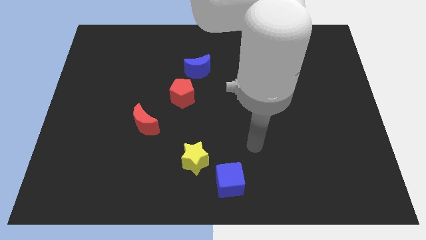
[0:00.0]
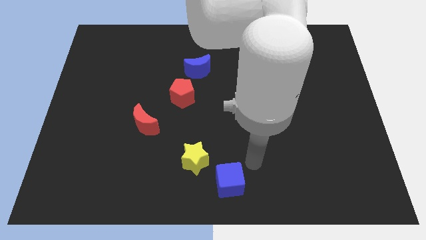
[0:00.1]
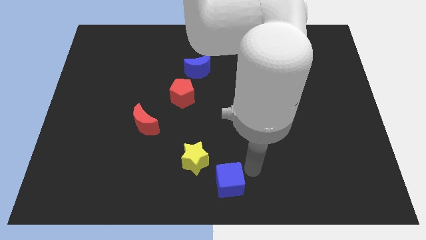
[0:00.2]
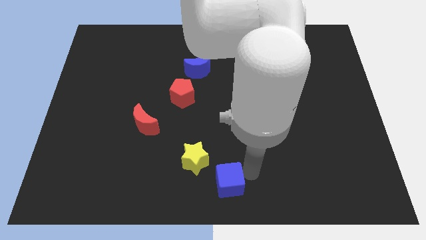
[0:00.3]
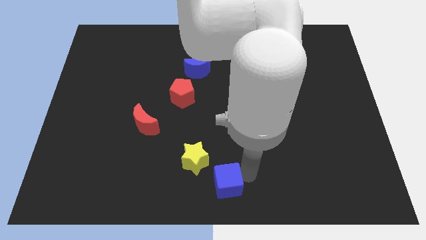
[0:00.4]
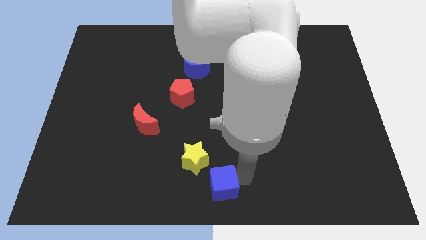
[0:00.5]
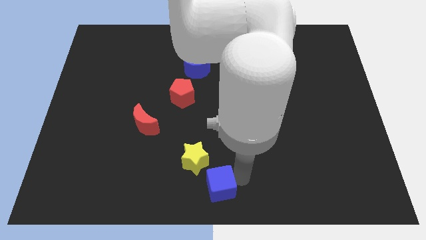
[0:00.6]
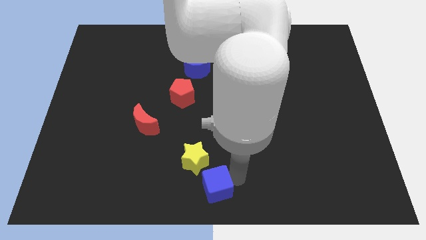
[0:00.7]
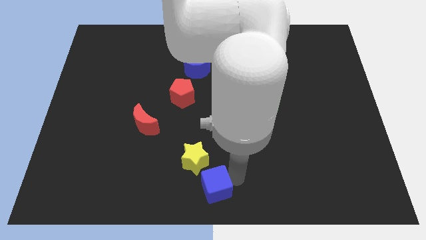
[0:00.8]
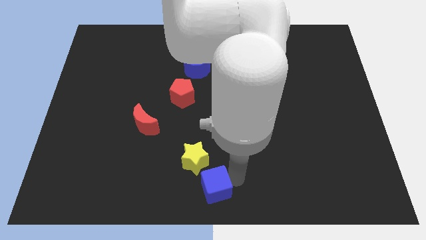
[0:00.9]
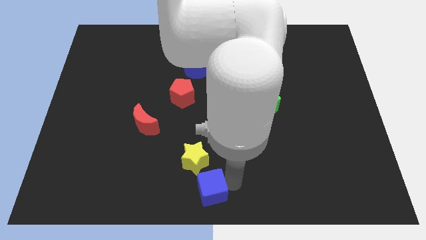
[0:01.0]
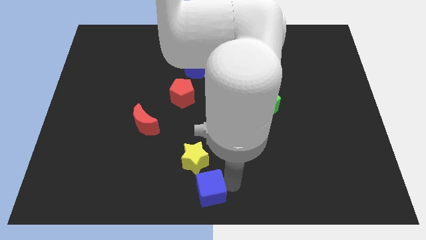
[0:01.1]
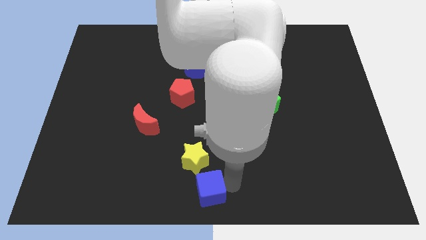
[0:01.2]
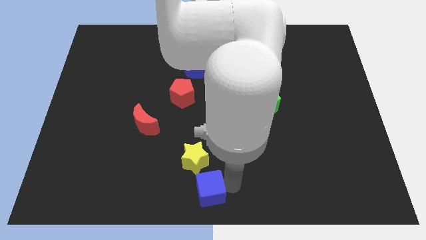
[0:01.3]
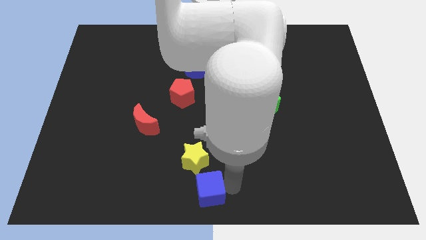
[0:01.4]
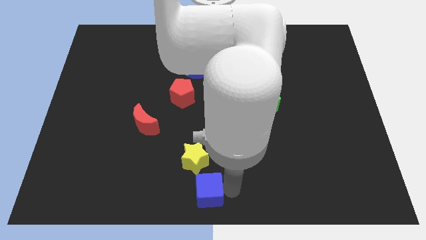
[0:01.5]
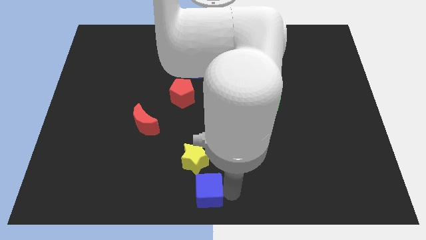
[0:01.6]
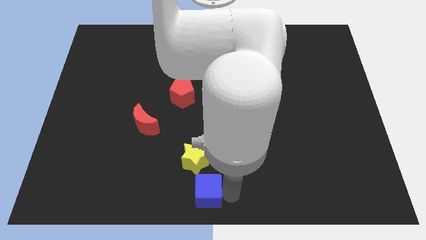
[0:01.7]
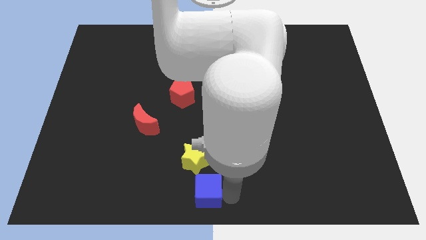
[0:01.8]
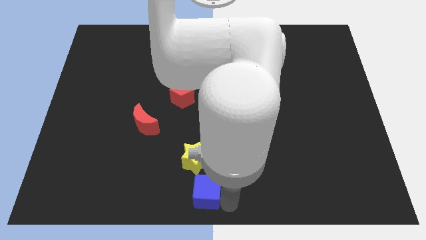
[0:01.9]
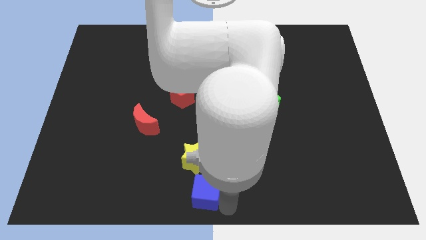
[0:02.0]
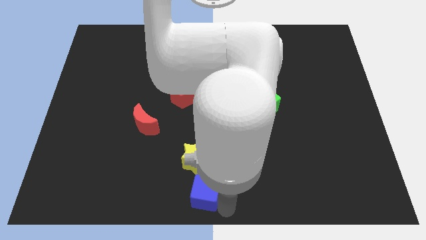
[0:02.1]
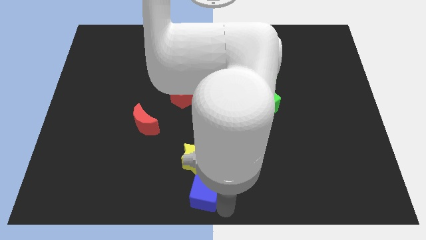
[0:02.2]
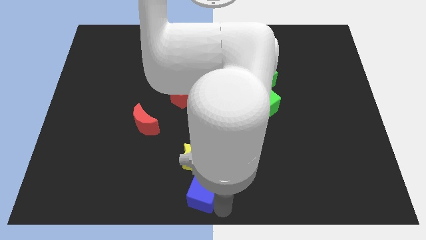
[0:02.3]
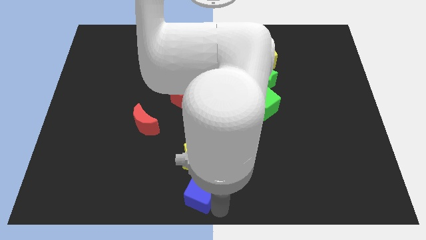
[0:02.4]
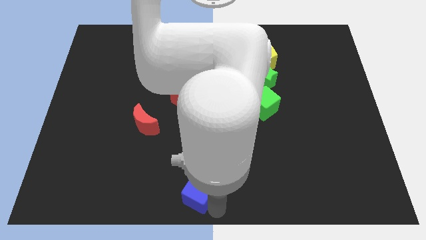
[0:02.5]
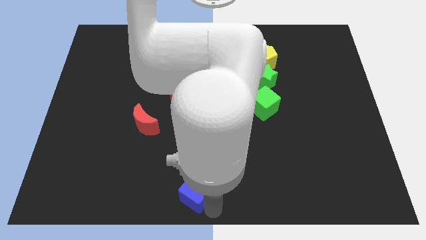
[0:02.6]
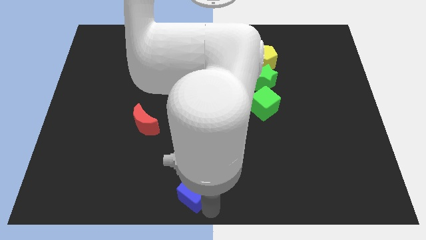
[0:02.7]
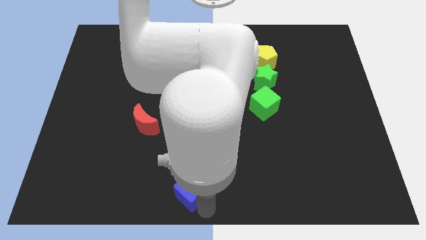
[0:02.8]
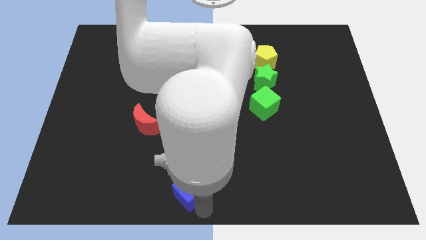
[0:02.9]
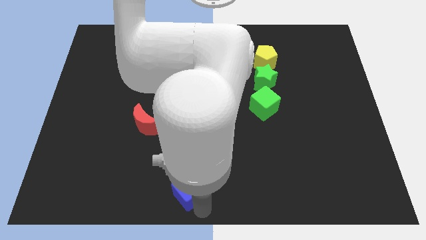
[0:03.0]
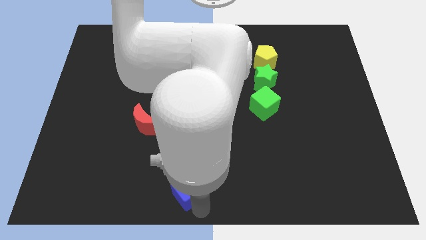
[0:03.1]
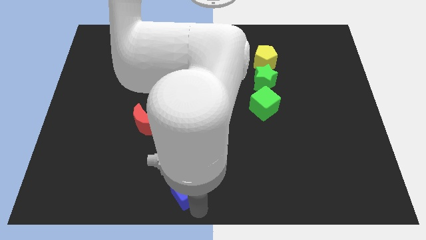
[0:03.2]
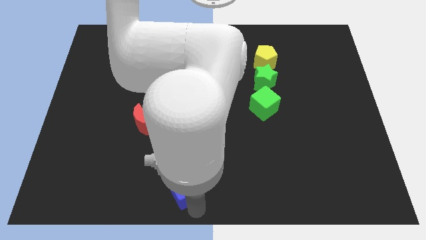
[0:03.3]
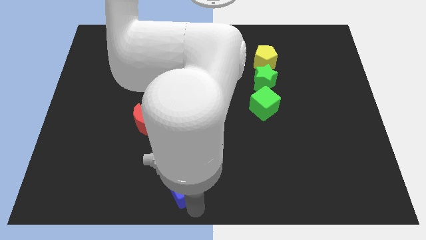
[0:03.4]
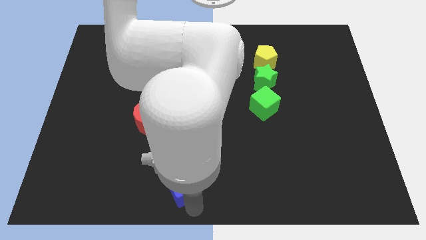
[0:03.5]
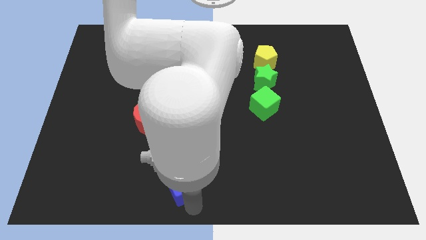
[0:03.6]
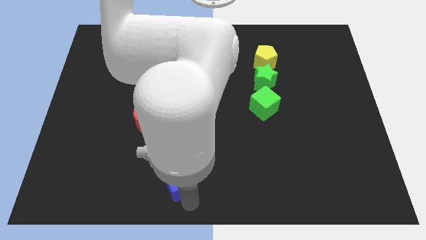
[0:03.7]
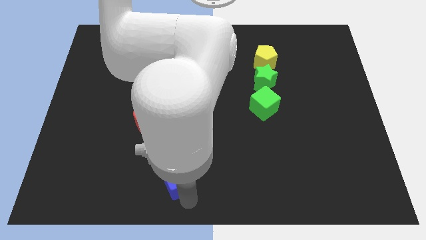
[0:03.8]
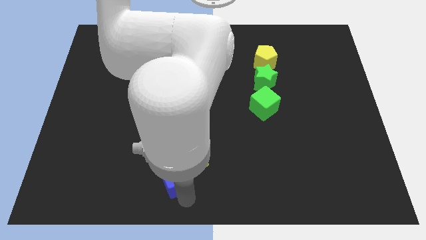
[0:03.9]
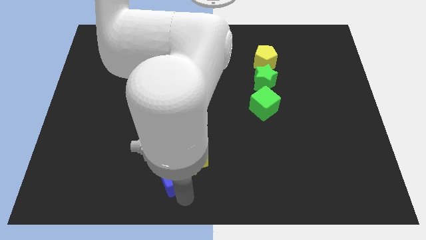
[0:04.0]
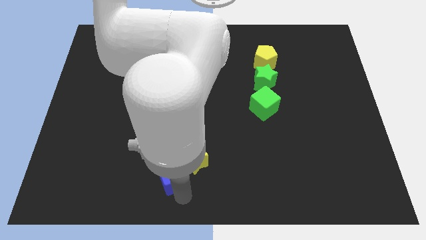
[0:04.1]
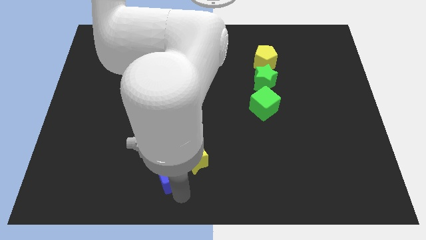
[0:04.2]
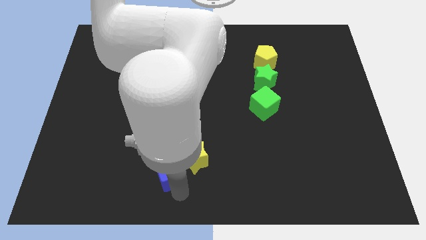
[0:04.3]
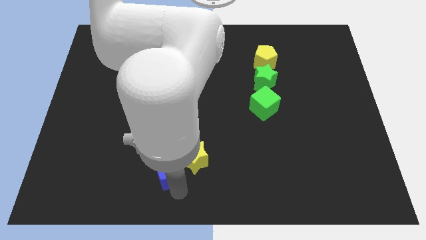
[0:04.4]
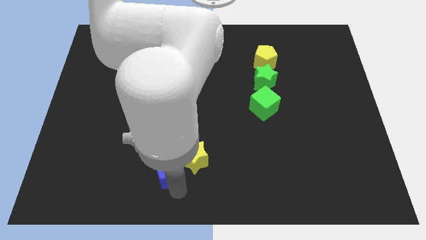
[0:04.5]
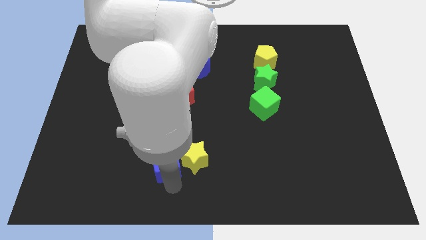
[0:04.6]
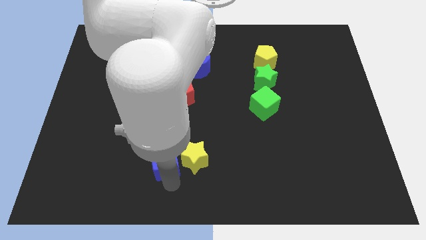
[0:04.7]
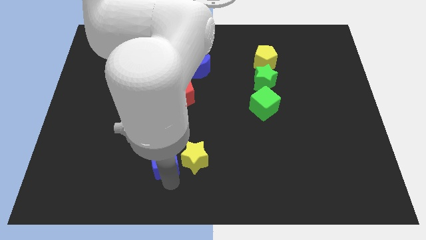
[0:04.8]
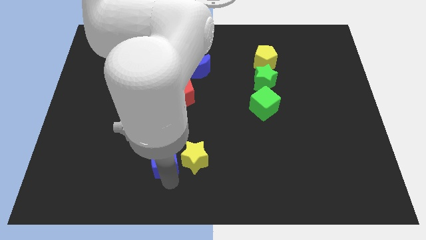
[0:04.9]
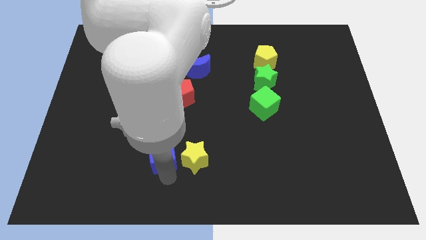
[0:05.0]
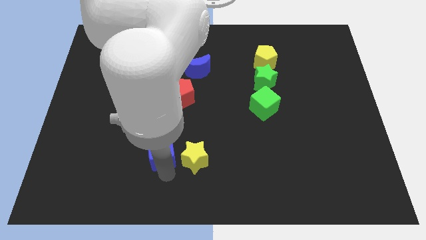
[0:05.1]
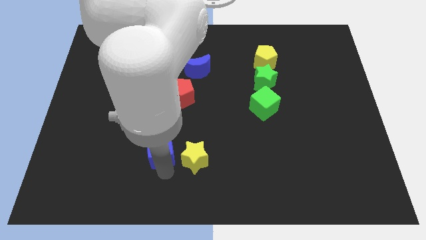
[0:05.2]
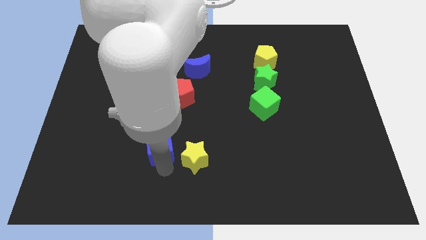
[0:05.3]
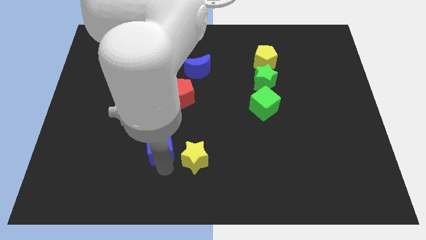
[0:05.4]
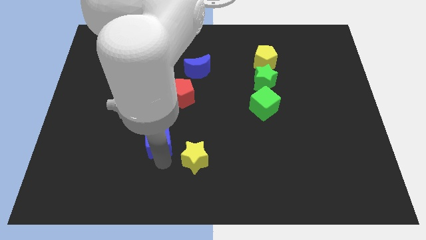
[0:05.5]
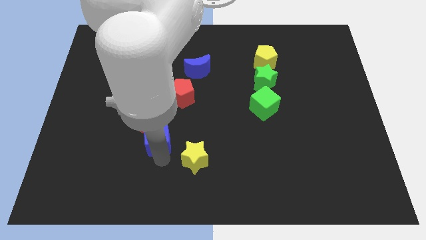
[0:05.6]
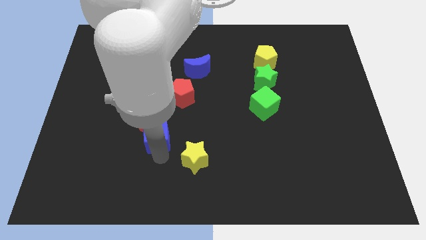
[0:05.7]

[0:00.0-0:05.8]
move the blue cube towards the red moon

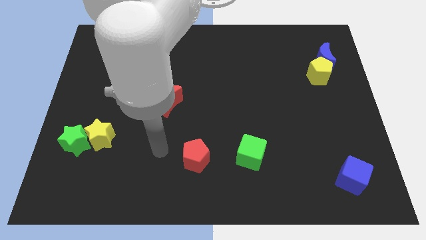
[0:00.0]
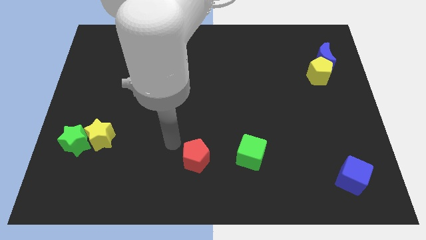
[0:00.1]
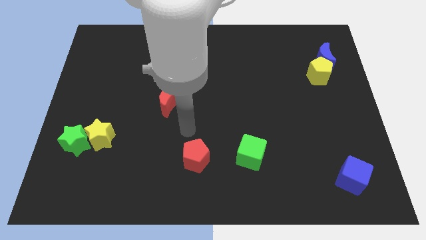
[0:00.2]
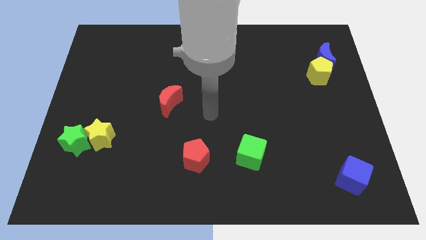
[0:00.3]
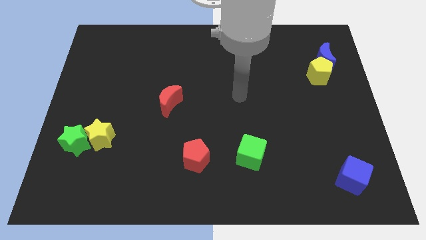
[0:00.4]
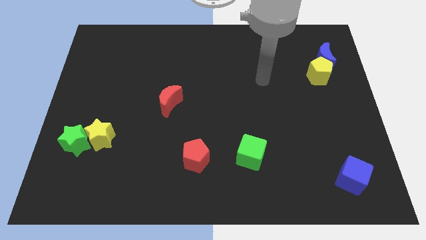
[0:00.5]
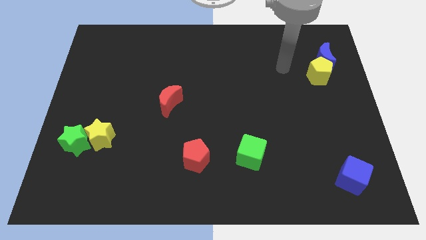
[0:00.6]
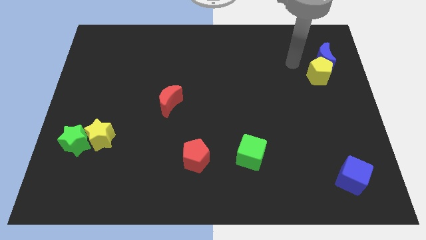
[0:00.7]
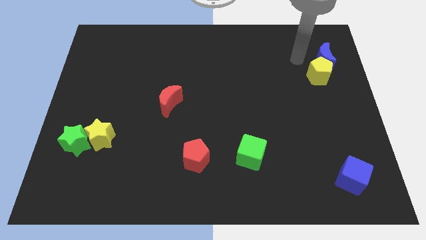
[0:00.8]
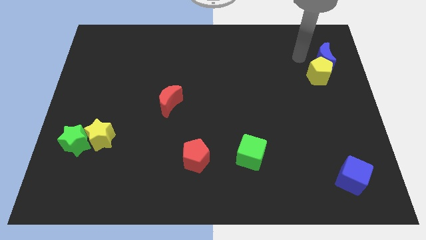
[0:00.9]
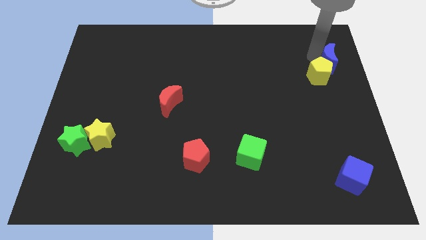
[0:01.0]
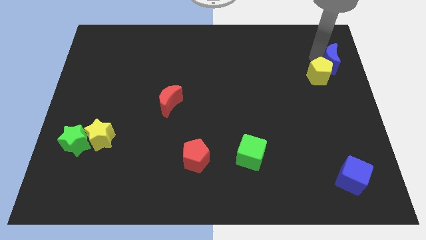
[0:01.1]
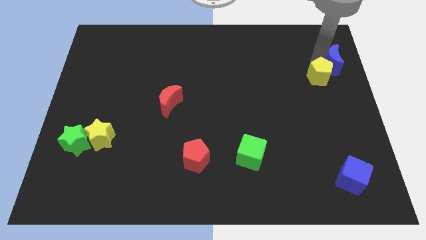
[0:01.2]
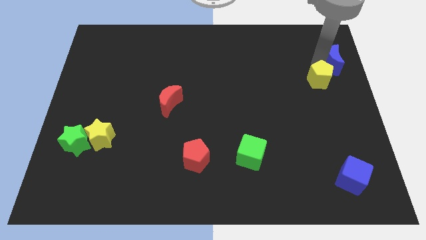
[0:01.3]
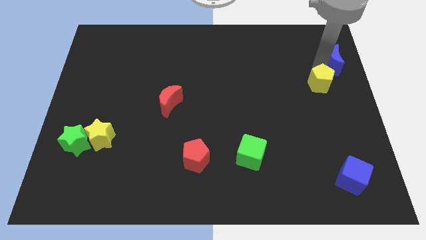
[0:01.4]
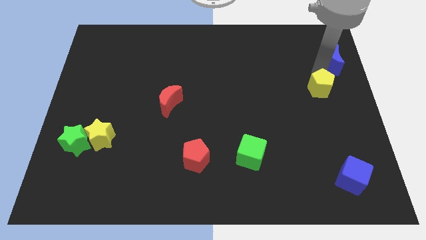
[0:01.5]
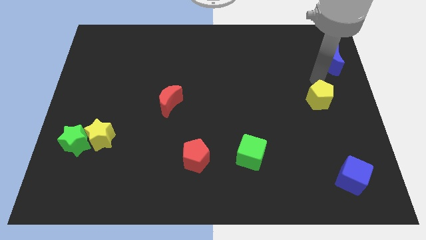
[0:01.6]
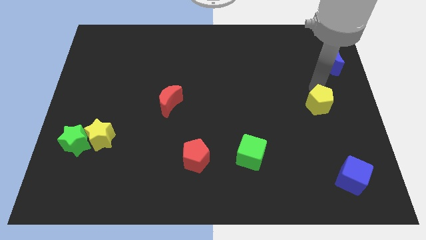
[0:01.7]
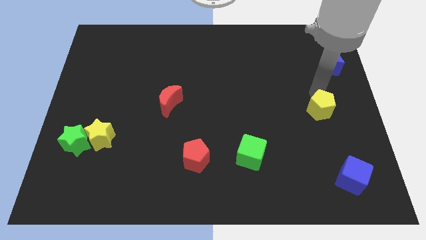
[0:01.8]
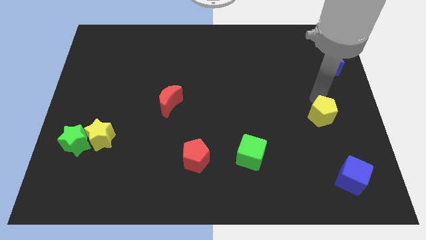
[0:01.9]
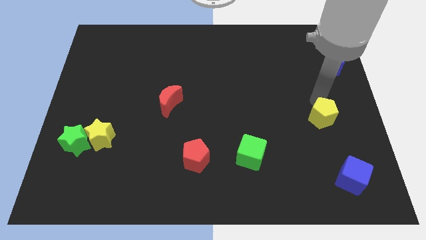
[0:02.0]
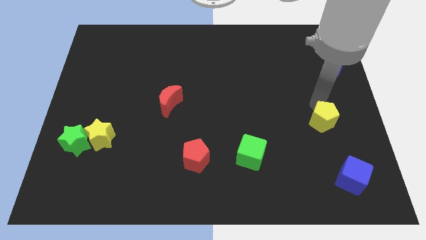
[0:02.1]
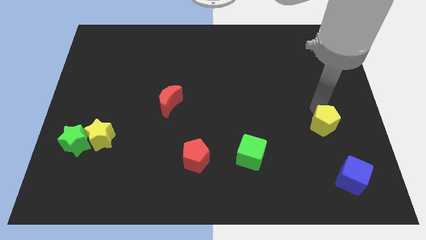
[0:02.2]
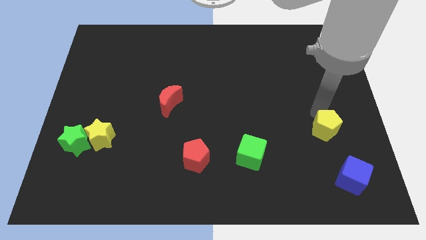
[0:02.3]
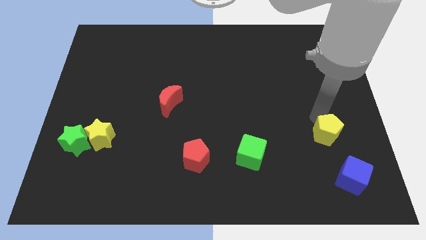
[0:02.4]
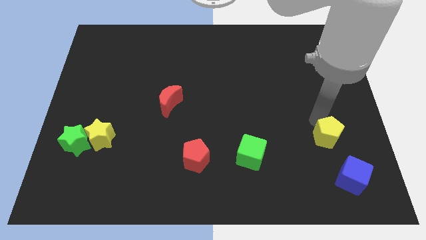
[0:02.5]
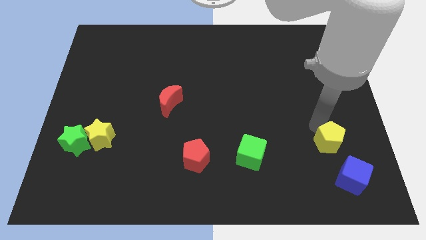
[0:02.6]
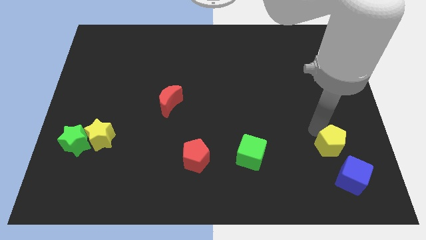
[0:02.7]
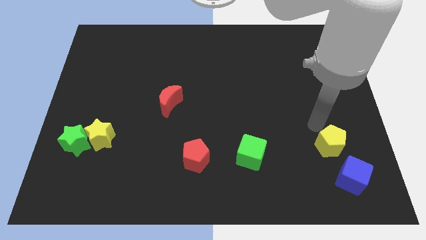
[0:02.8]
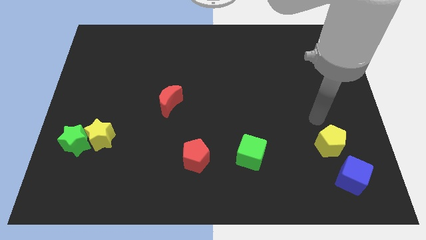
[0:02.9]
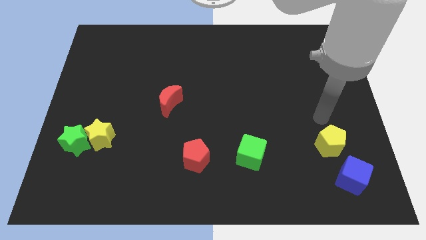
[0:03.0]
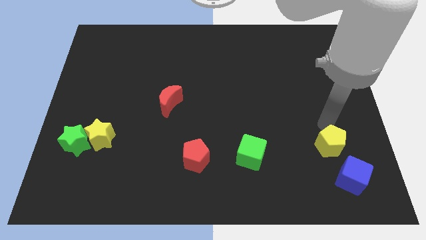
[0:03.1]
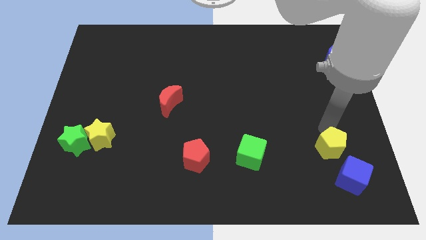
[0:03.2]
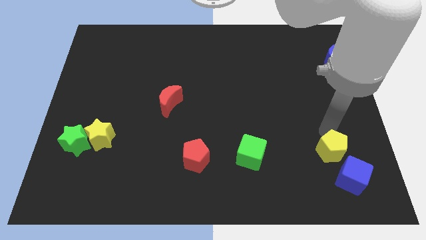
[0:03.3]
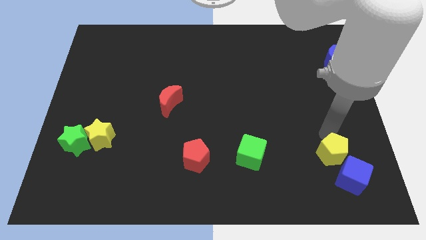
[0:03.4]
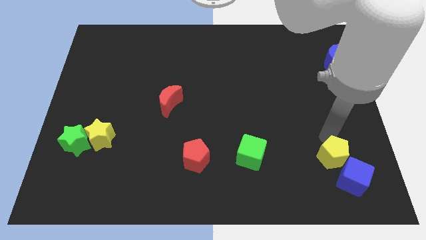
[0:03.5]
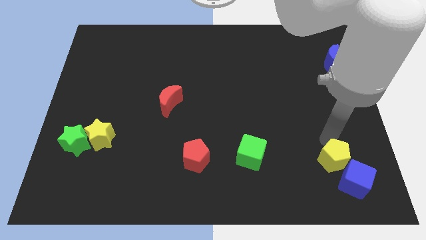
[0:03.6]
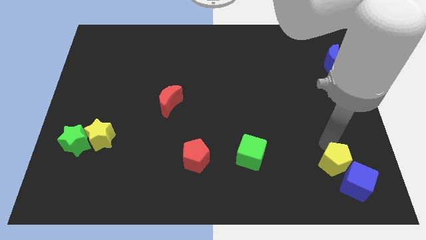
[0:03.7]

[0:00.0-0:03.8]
slide the yellow pentagon close to the blue cube
